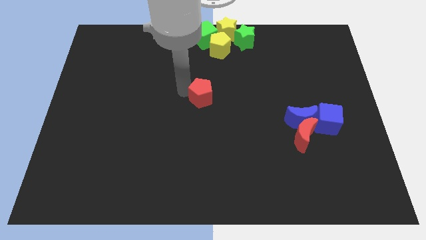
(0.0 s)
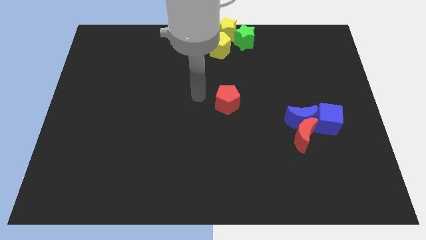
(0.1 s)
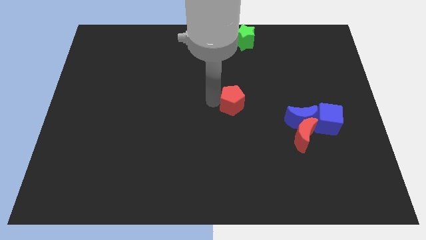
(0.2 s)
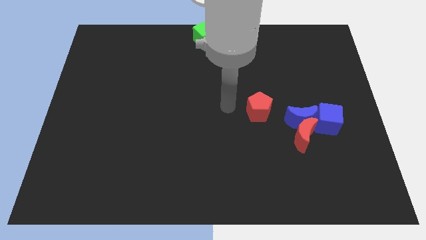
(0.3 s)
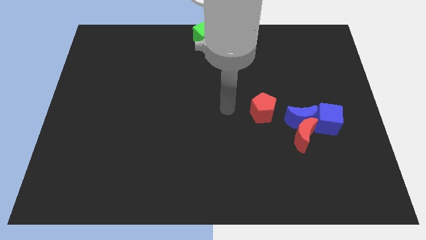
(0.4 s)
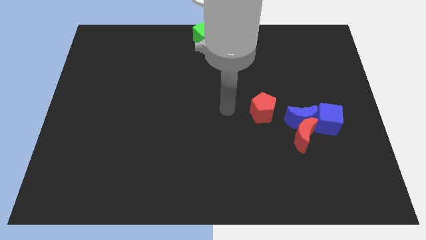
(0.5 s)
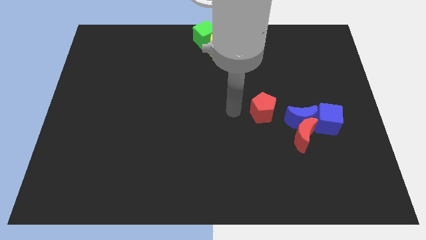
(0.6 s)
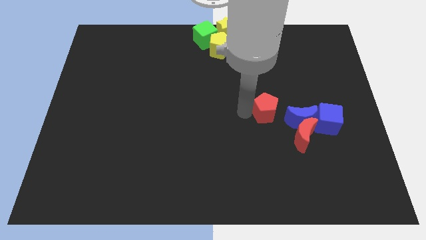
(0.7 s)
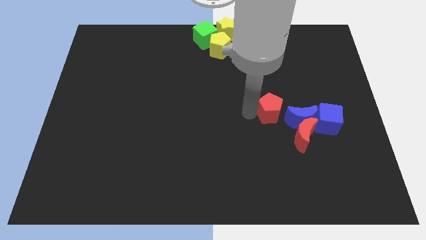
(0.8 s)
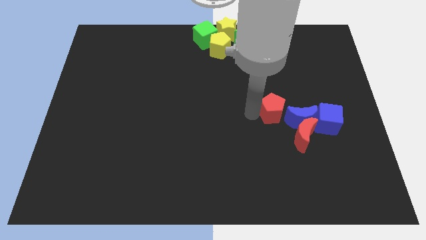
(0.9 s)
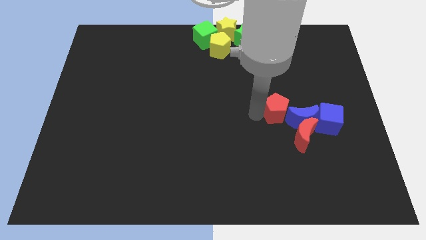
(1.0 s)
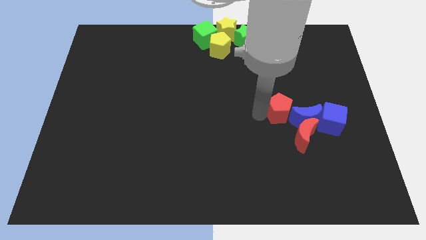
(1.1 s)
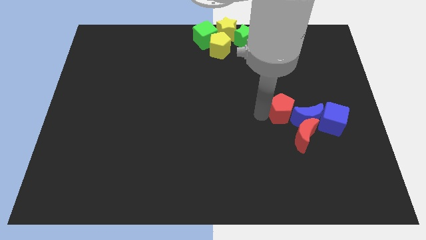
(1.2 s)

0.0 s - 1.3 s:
put red pentagon and blue moon together

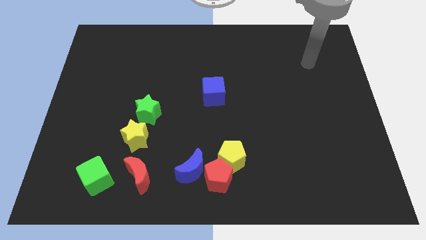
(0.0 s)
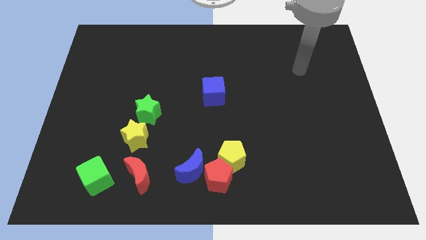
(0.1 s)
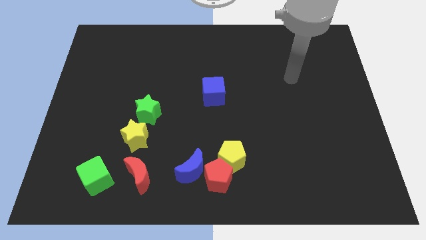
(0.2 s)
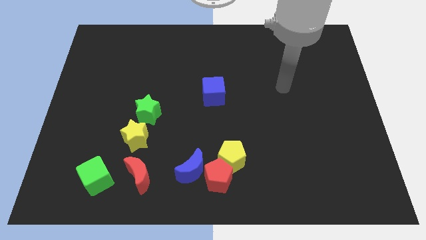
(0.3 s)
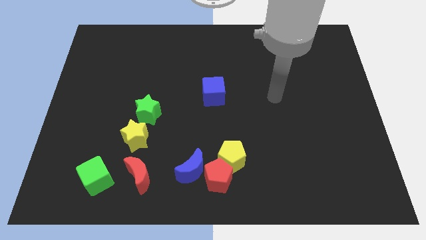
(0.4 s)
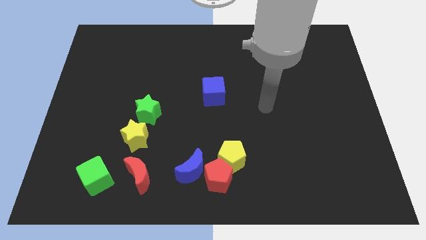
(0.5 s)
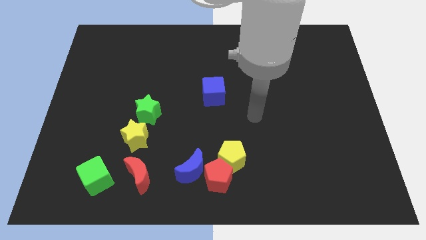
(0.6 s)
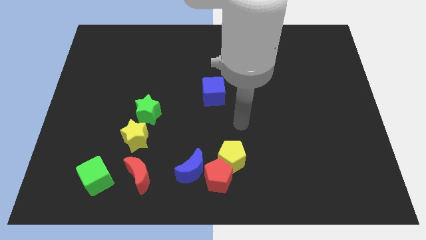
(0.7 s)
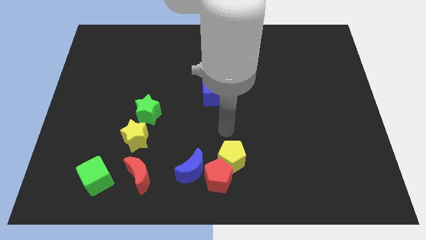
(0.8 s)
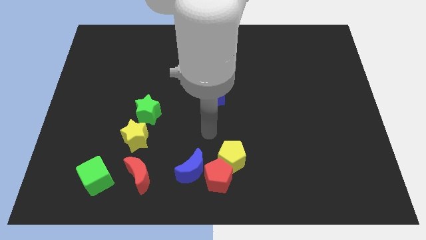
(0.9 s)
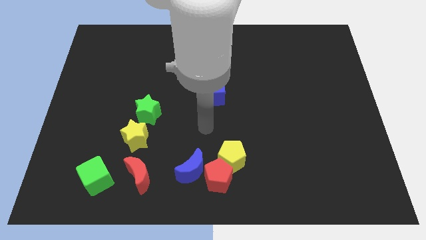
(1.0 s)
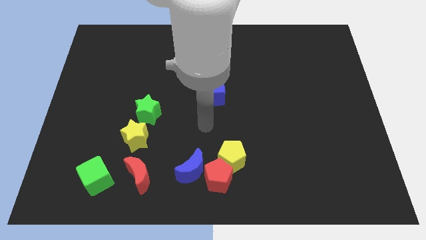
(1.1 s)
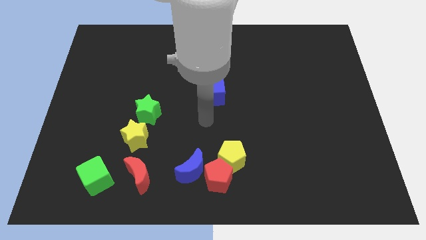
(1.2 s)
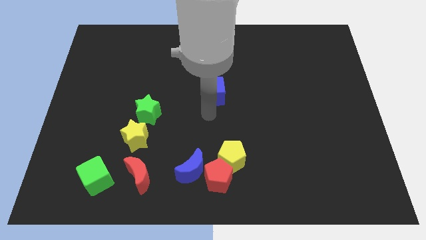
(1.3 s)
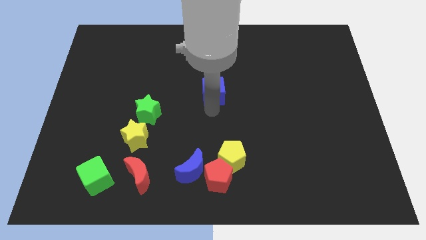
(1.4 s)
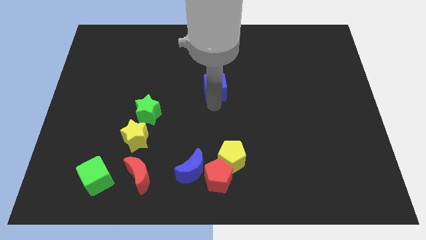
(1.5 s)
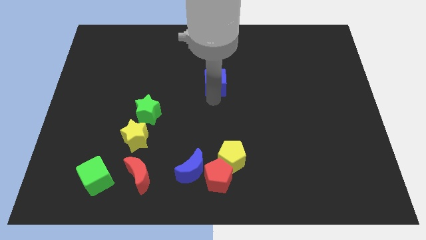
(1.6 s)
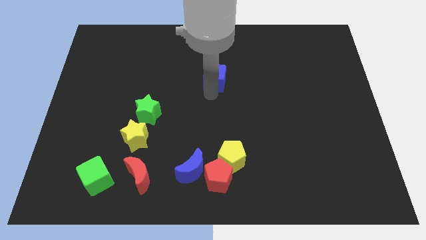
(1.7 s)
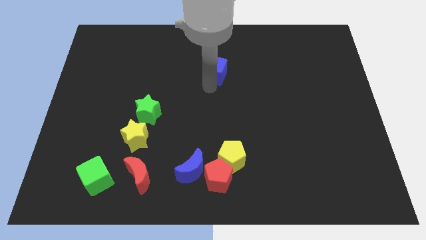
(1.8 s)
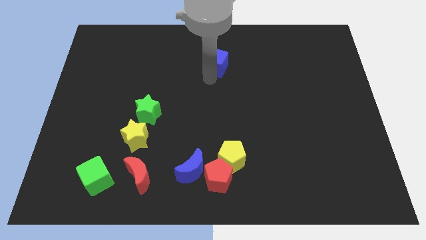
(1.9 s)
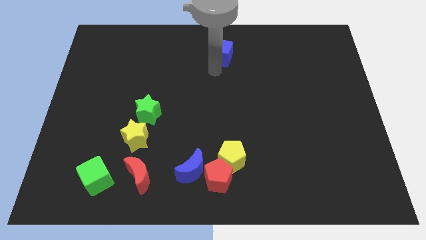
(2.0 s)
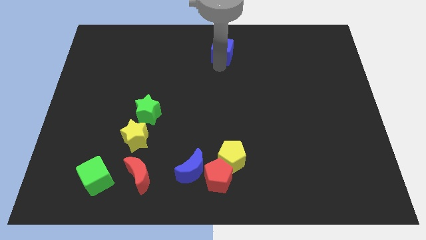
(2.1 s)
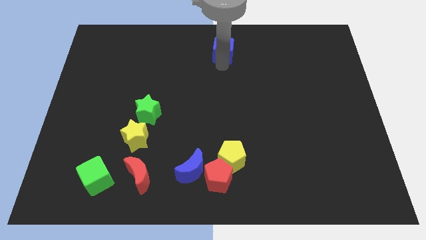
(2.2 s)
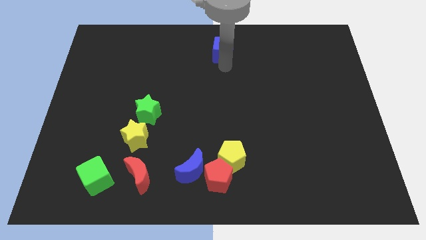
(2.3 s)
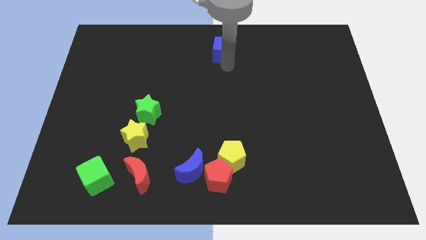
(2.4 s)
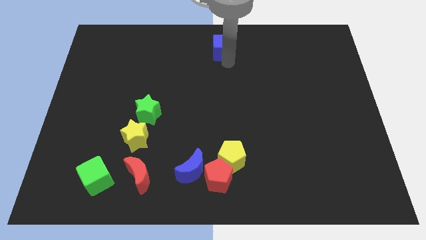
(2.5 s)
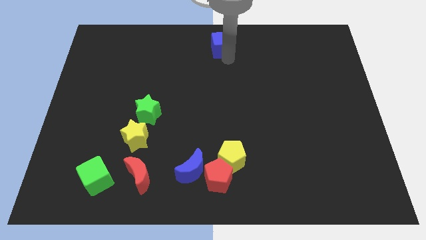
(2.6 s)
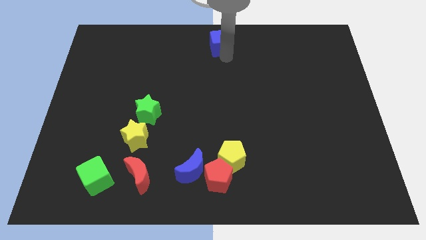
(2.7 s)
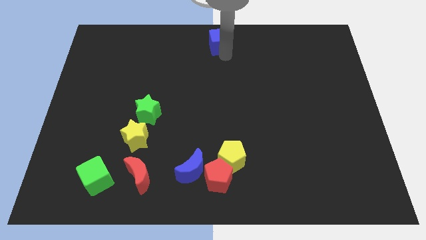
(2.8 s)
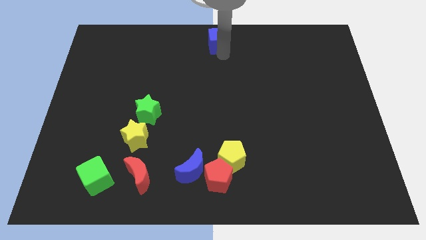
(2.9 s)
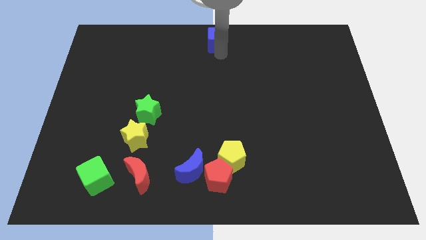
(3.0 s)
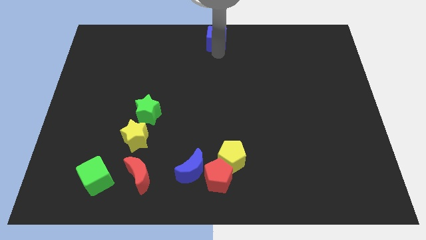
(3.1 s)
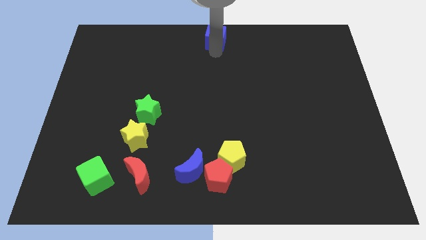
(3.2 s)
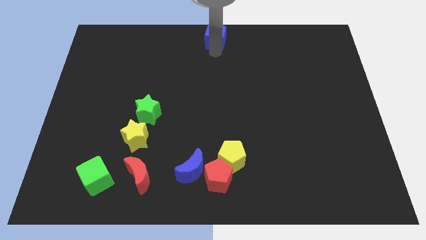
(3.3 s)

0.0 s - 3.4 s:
push the blue cube to the top center of the board

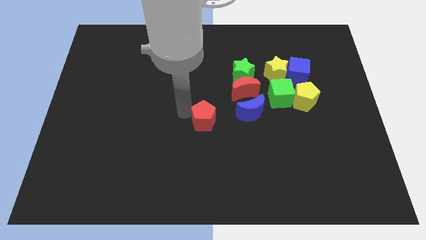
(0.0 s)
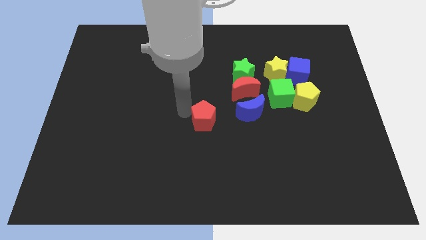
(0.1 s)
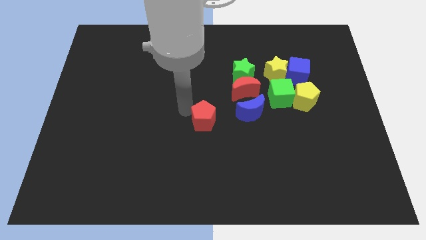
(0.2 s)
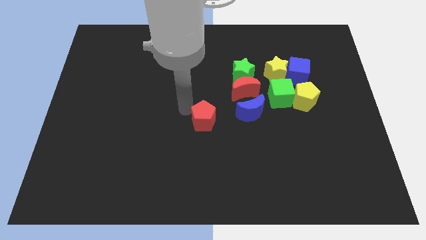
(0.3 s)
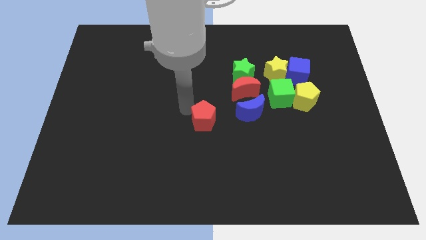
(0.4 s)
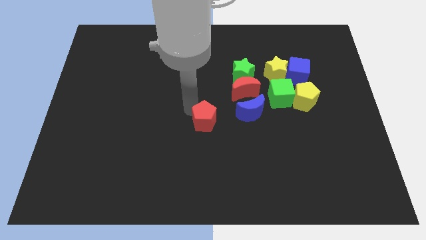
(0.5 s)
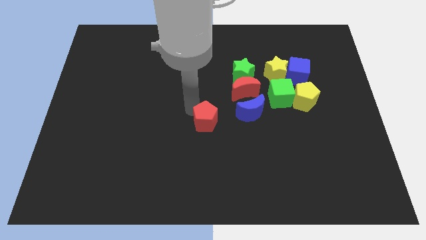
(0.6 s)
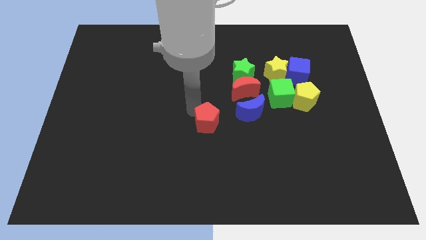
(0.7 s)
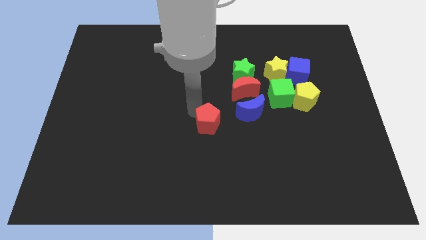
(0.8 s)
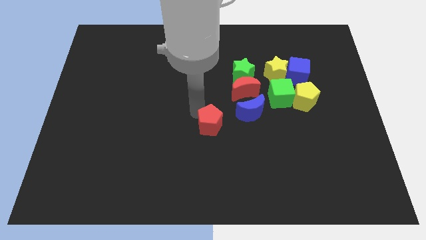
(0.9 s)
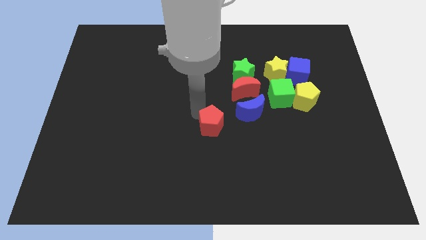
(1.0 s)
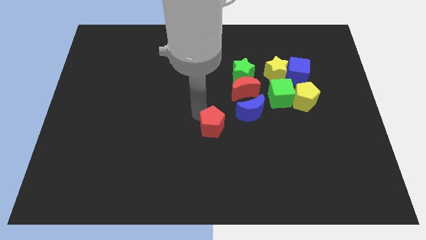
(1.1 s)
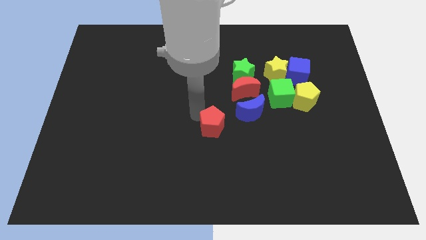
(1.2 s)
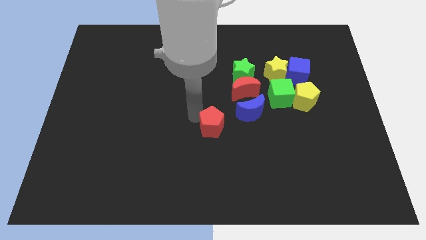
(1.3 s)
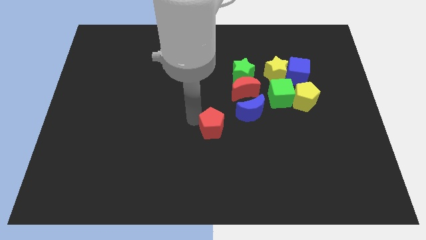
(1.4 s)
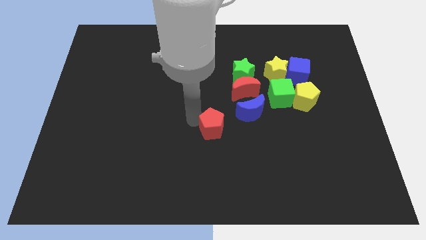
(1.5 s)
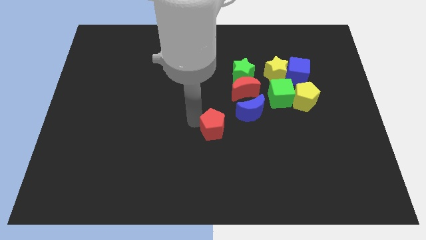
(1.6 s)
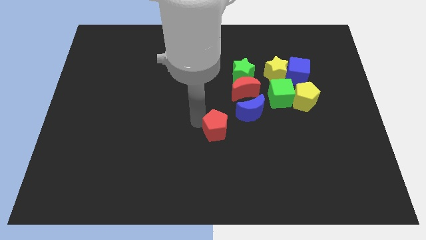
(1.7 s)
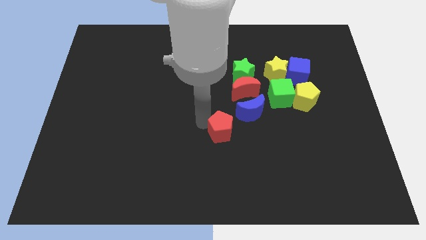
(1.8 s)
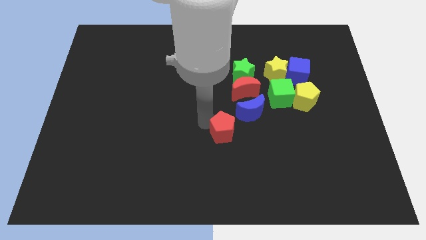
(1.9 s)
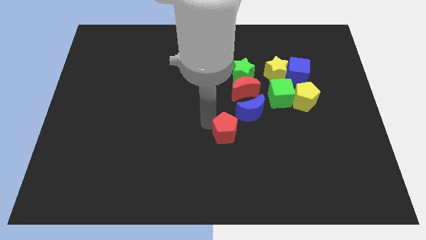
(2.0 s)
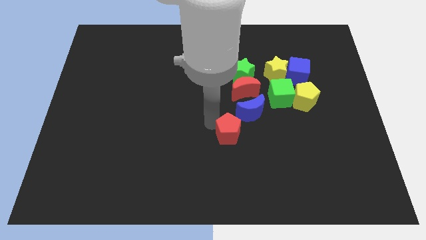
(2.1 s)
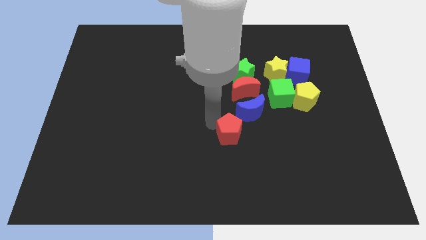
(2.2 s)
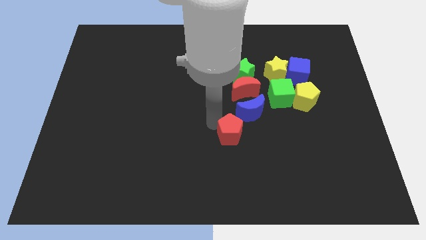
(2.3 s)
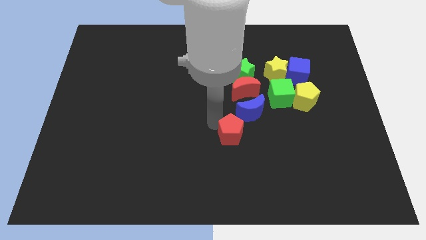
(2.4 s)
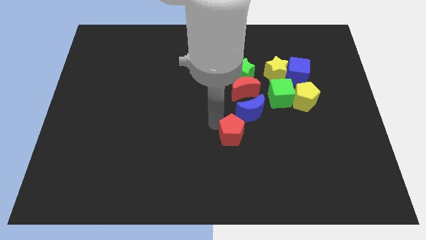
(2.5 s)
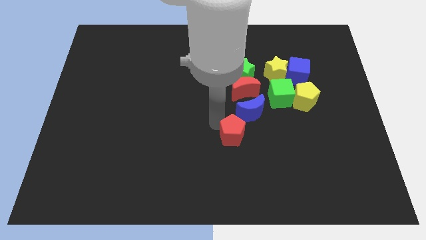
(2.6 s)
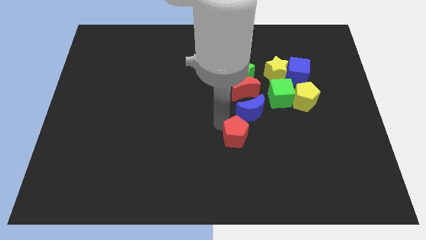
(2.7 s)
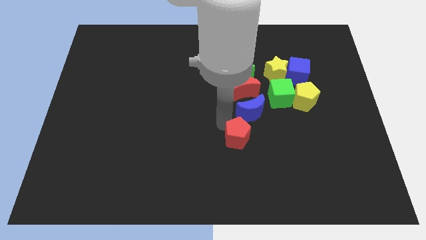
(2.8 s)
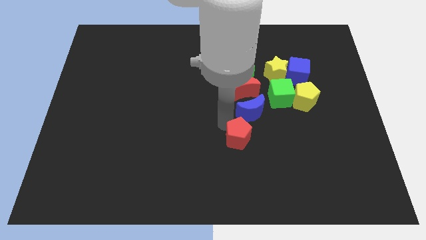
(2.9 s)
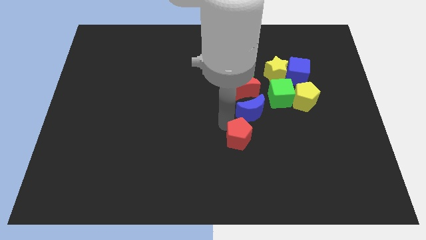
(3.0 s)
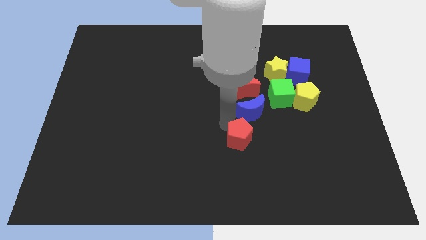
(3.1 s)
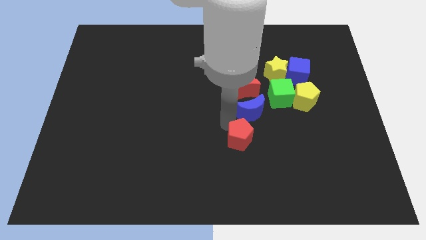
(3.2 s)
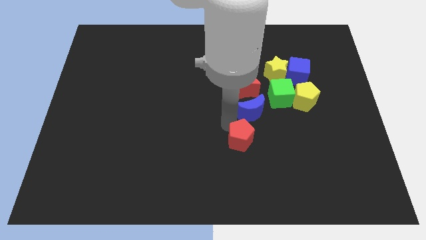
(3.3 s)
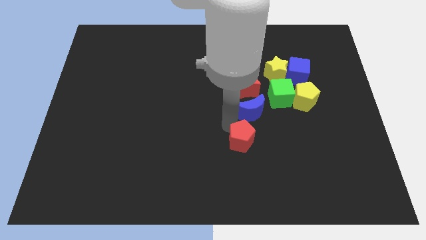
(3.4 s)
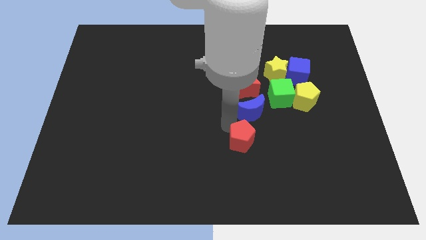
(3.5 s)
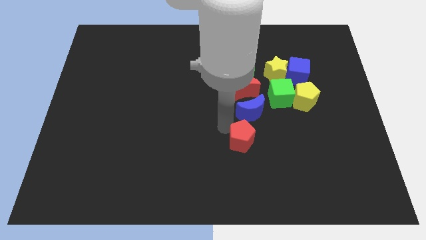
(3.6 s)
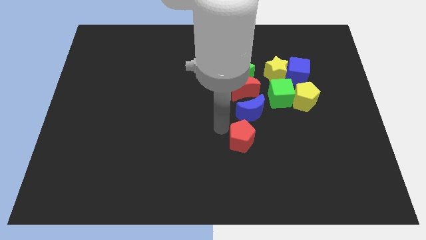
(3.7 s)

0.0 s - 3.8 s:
place red pentagon below blue crescent

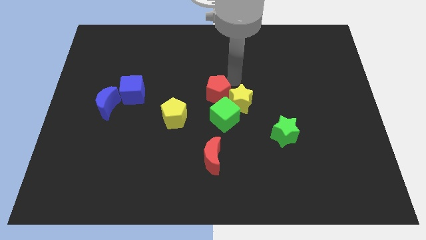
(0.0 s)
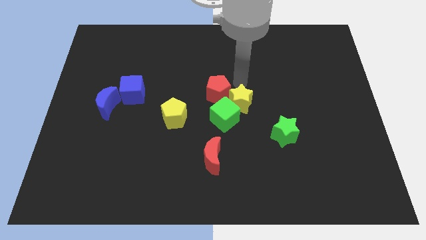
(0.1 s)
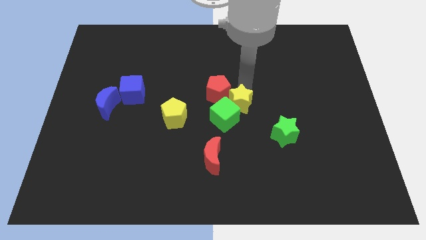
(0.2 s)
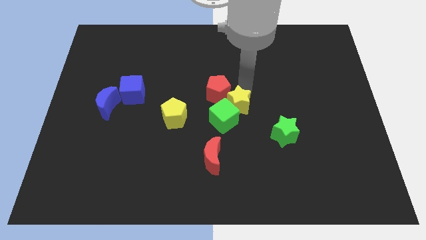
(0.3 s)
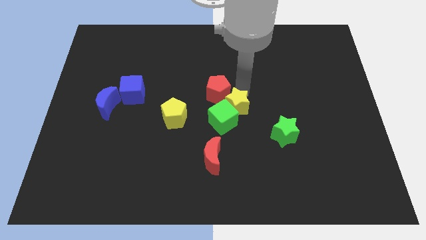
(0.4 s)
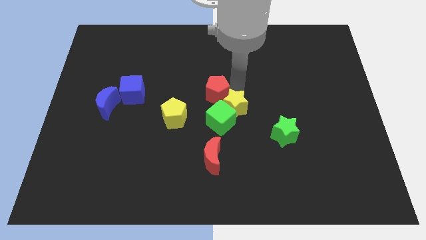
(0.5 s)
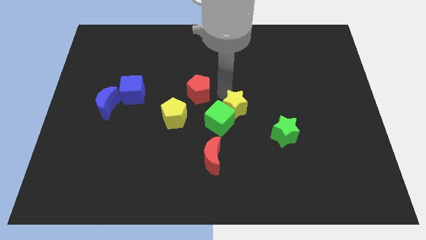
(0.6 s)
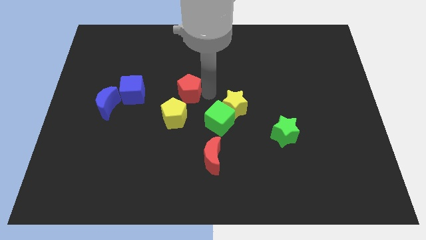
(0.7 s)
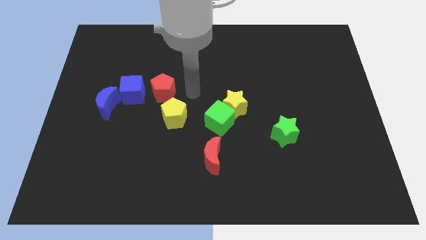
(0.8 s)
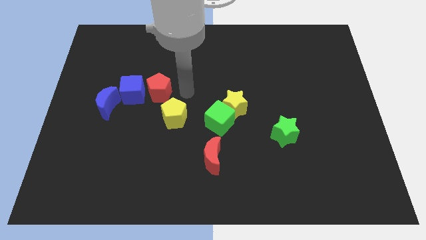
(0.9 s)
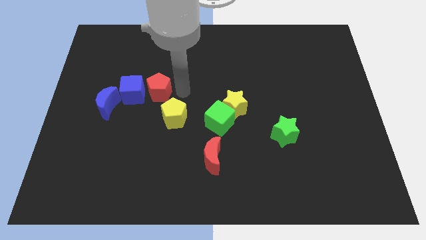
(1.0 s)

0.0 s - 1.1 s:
slide red pentagon towards blue cube
